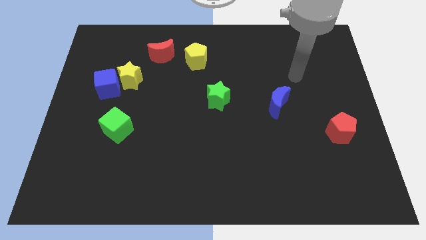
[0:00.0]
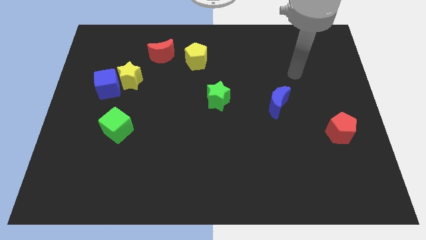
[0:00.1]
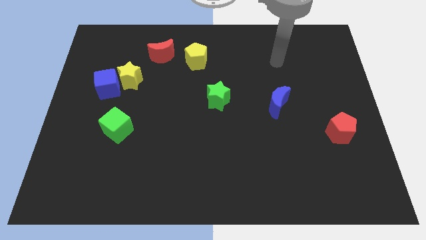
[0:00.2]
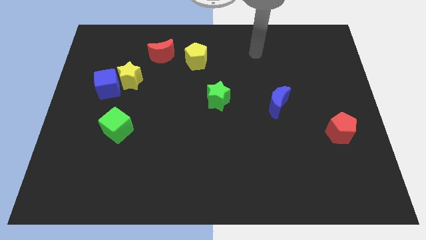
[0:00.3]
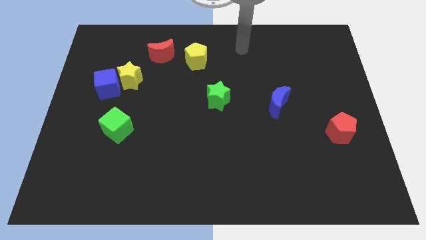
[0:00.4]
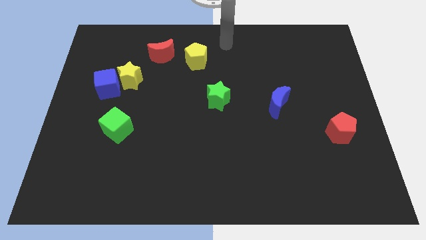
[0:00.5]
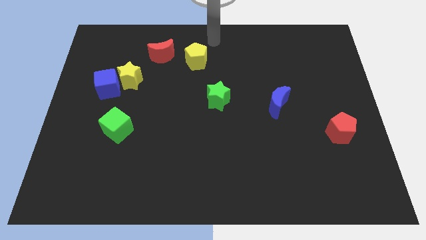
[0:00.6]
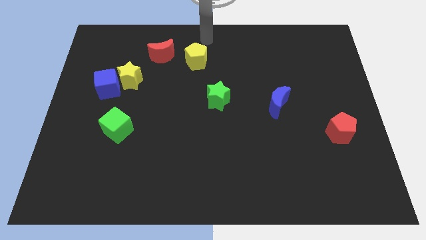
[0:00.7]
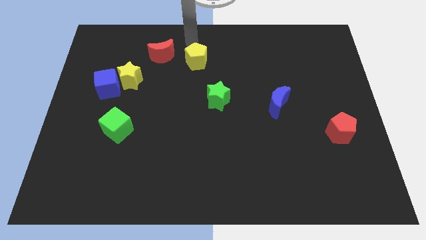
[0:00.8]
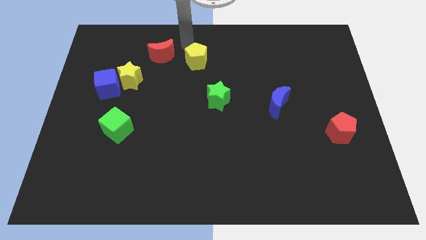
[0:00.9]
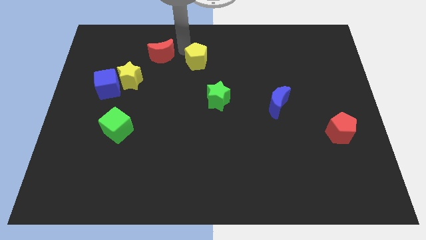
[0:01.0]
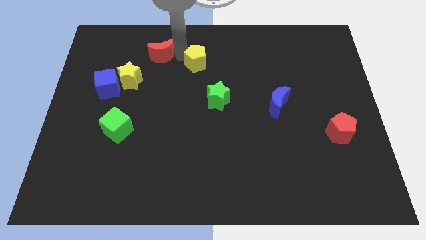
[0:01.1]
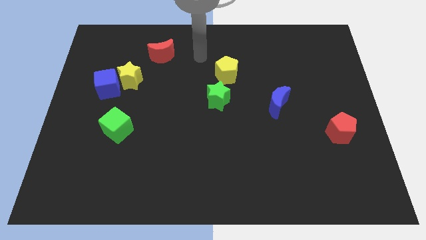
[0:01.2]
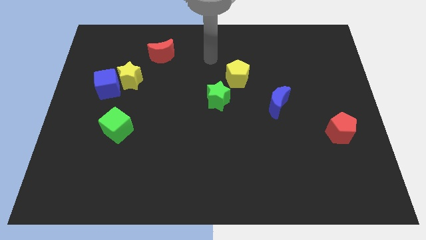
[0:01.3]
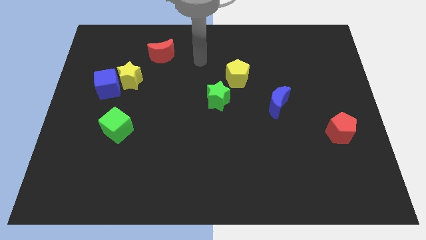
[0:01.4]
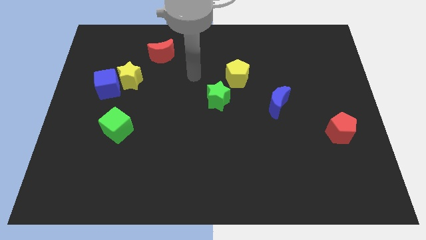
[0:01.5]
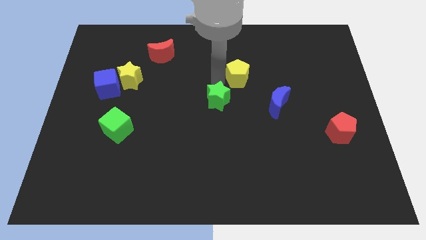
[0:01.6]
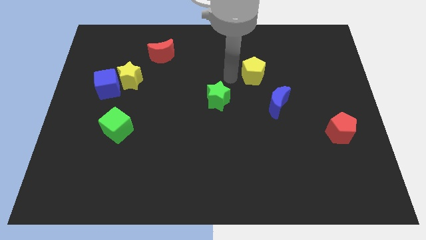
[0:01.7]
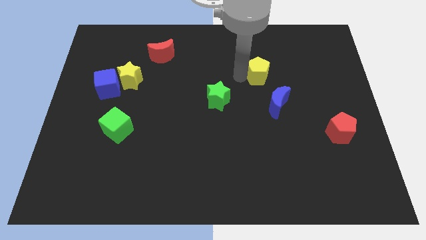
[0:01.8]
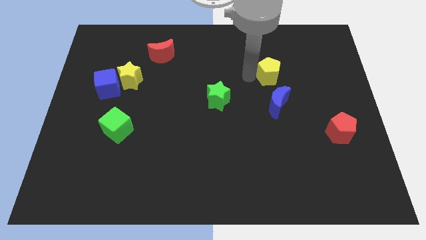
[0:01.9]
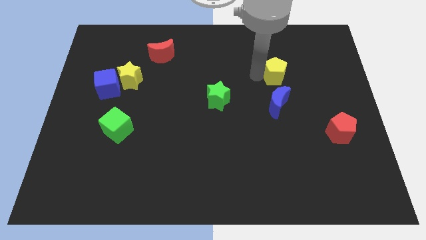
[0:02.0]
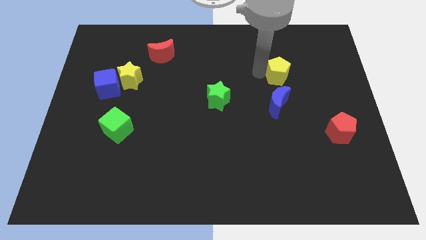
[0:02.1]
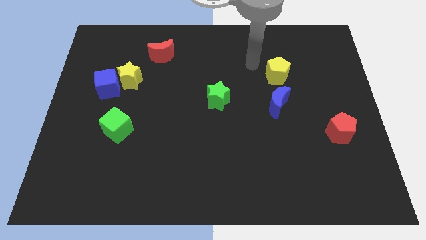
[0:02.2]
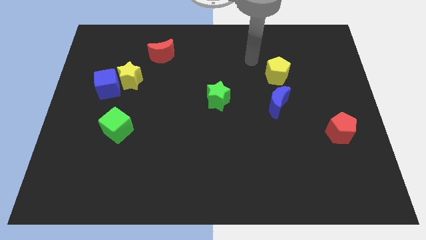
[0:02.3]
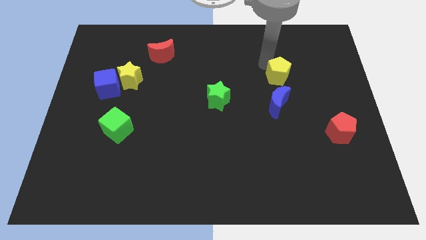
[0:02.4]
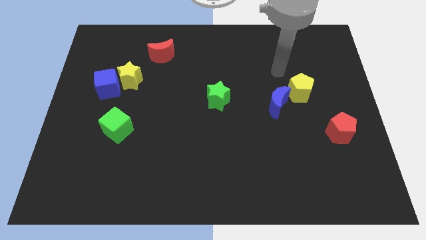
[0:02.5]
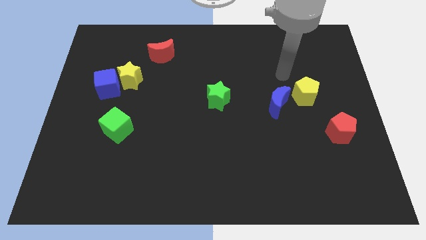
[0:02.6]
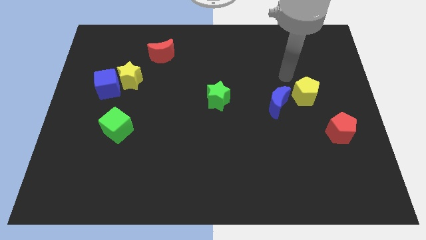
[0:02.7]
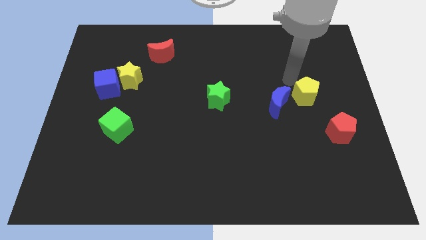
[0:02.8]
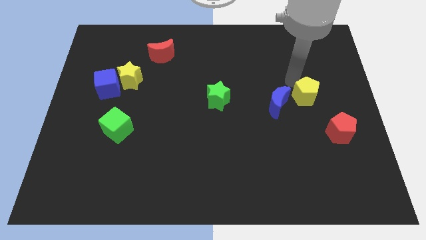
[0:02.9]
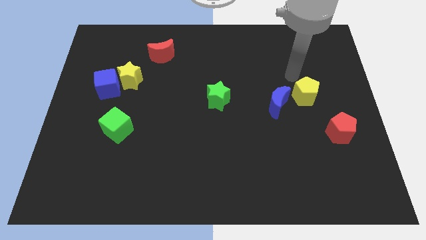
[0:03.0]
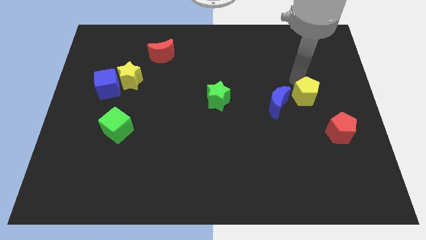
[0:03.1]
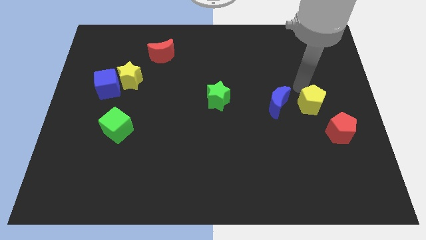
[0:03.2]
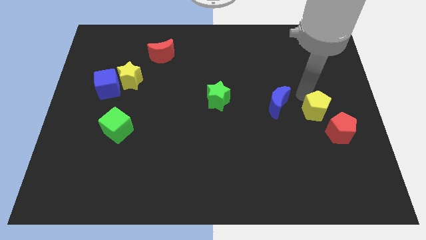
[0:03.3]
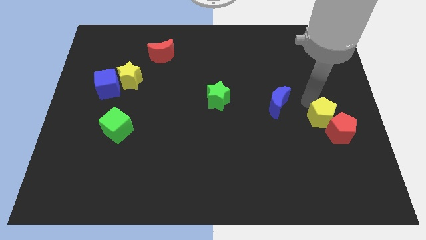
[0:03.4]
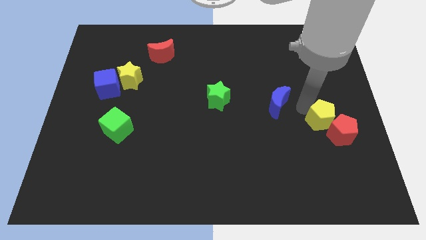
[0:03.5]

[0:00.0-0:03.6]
push the yellow pentagon to the red pentagon

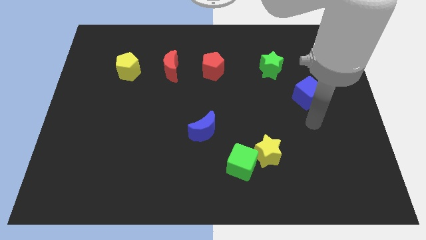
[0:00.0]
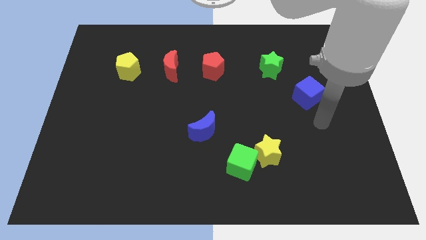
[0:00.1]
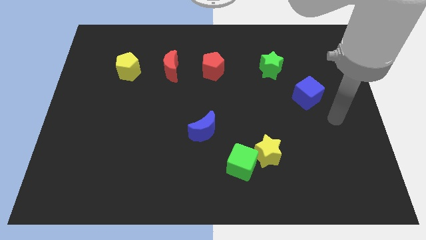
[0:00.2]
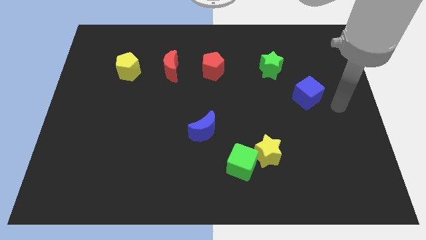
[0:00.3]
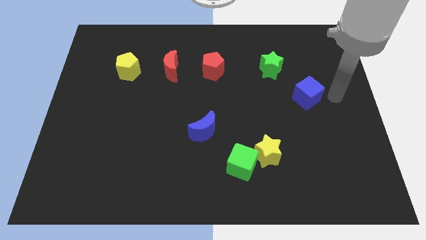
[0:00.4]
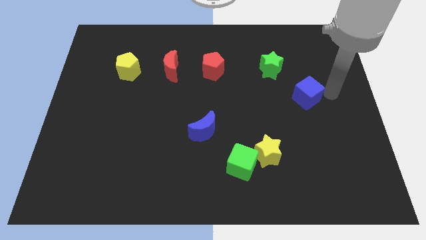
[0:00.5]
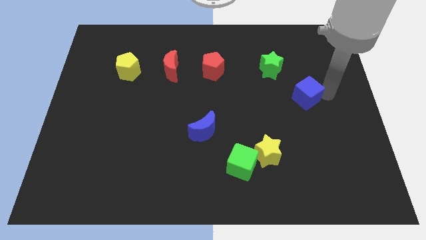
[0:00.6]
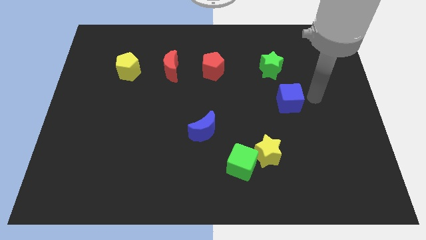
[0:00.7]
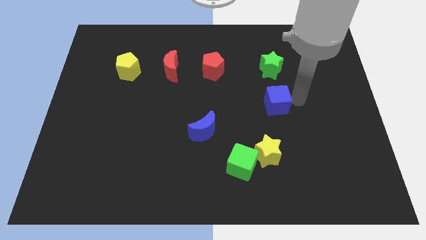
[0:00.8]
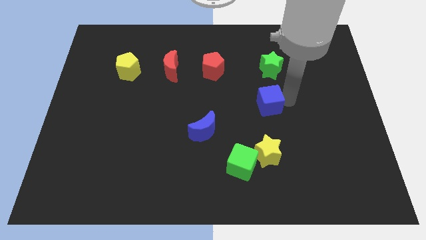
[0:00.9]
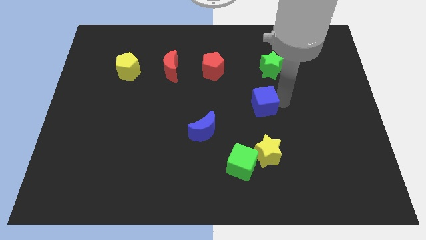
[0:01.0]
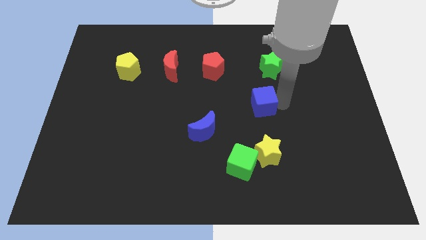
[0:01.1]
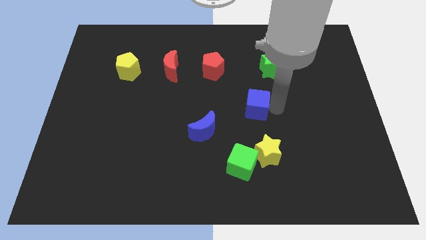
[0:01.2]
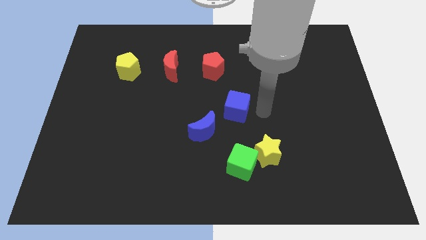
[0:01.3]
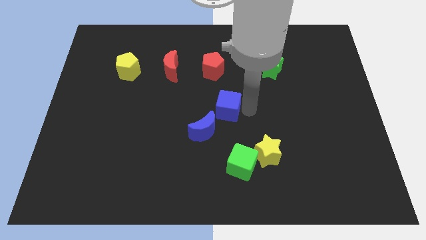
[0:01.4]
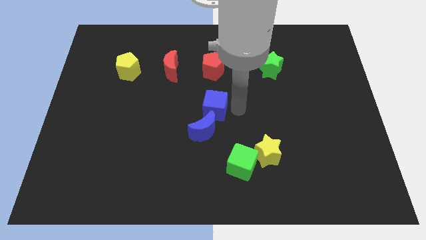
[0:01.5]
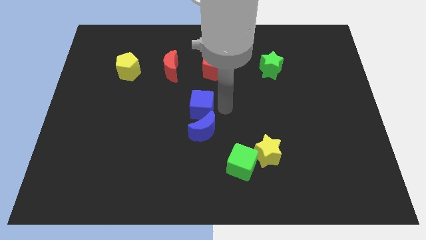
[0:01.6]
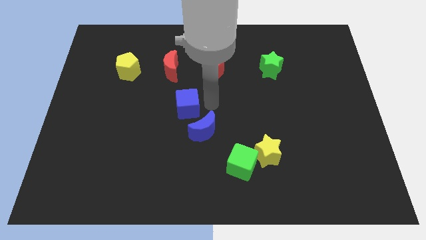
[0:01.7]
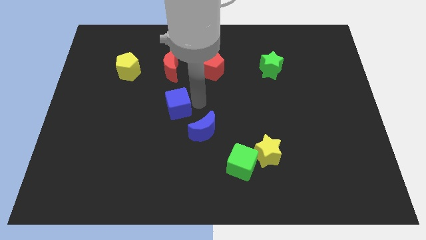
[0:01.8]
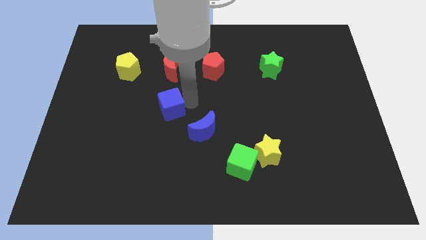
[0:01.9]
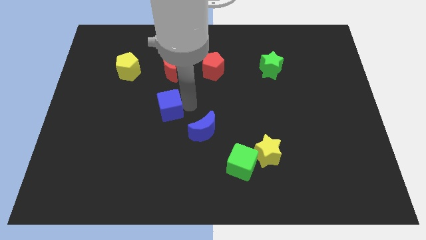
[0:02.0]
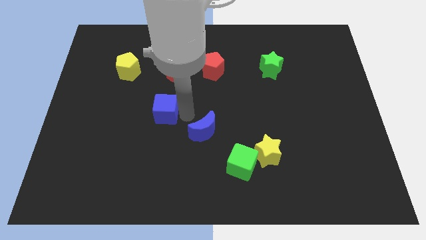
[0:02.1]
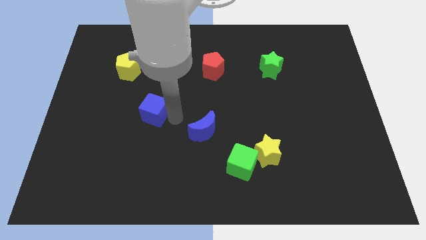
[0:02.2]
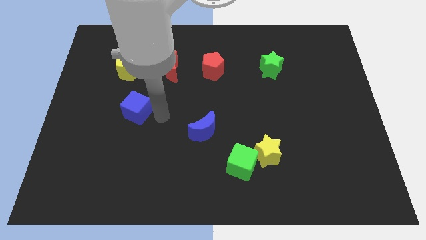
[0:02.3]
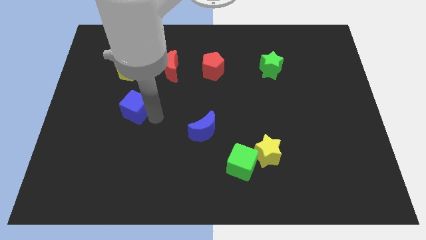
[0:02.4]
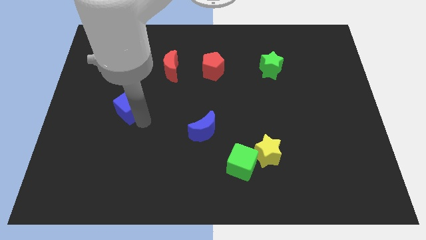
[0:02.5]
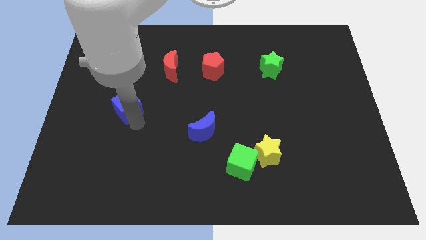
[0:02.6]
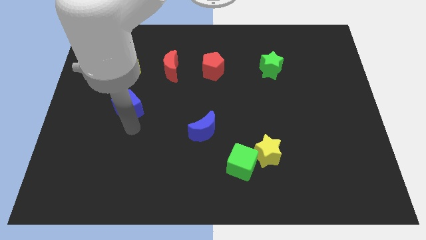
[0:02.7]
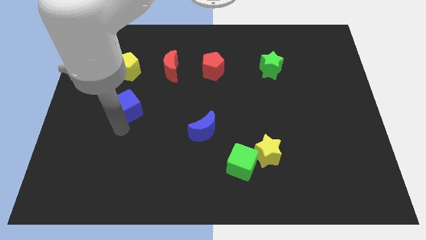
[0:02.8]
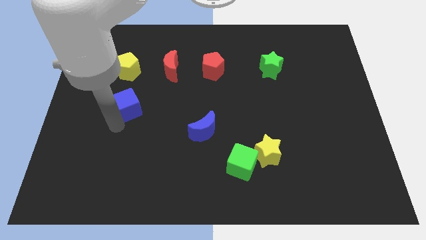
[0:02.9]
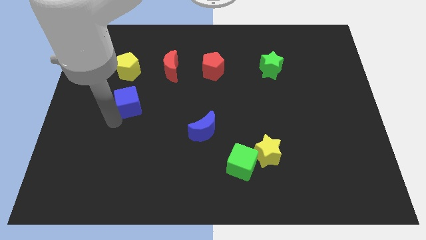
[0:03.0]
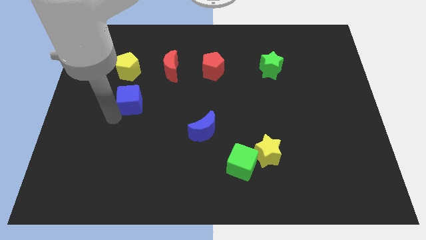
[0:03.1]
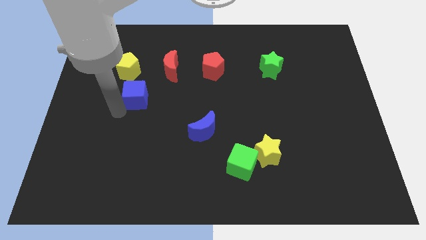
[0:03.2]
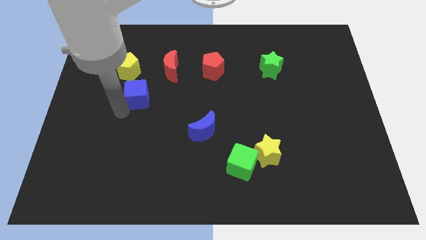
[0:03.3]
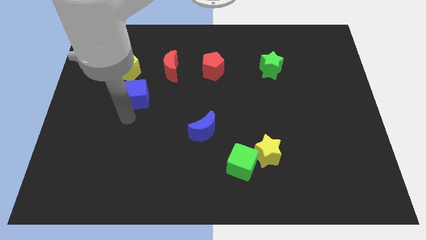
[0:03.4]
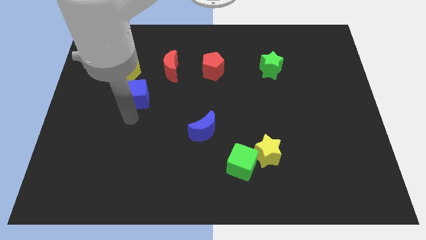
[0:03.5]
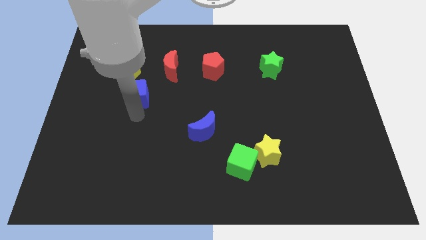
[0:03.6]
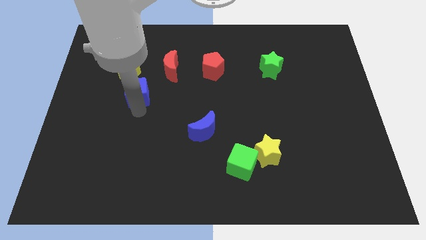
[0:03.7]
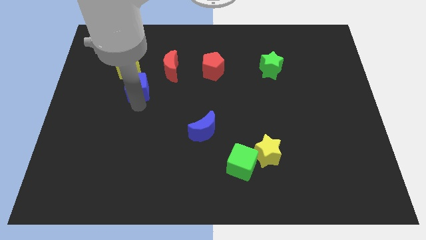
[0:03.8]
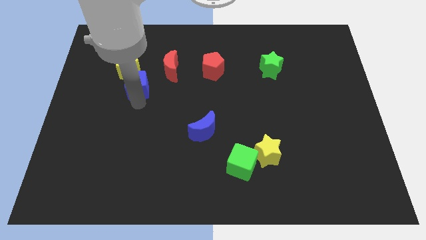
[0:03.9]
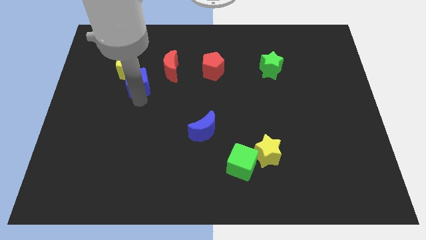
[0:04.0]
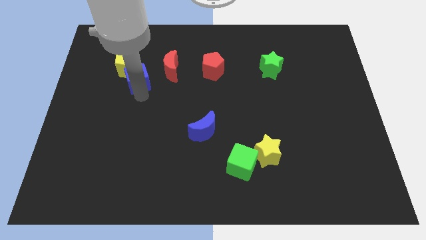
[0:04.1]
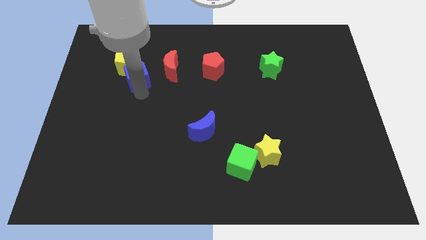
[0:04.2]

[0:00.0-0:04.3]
put the blue cube close to the yellow pentagon

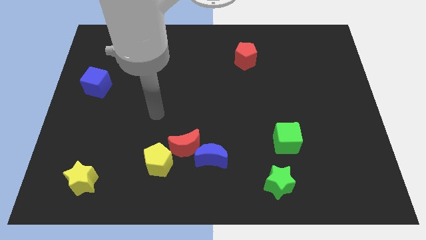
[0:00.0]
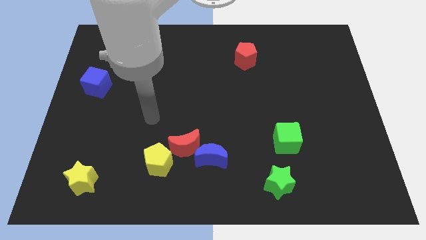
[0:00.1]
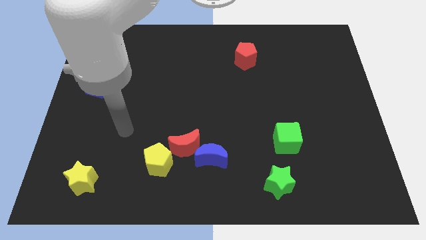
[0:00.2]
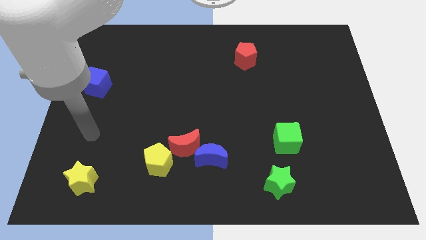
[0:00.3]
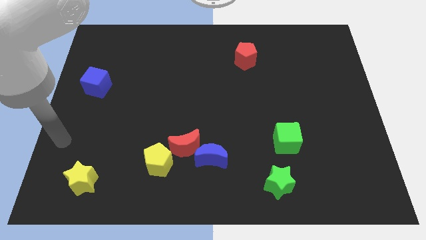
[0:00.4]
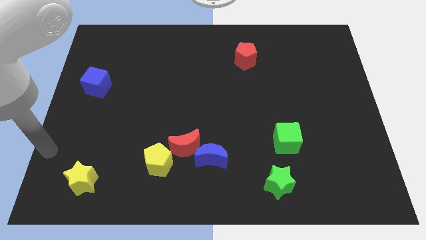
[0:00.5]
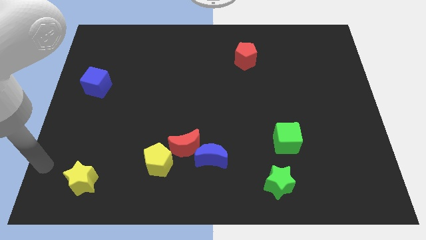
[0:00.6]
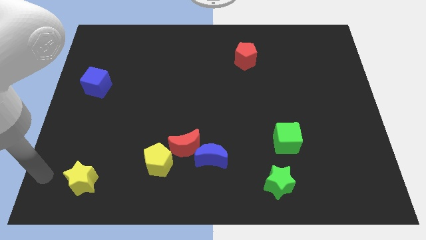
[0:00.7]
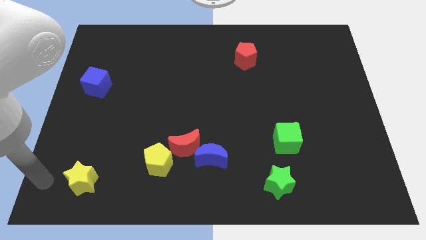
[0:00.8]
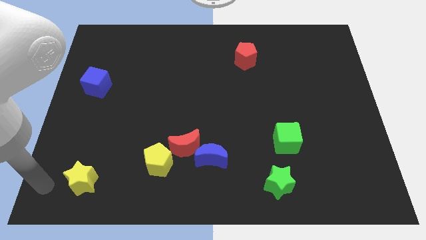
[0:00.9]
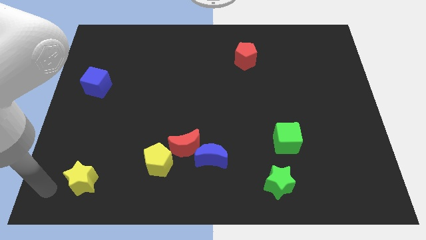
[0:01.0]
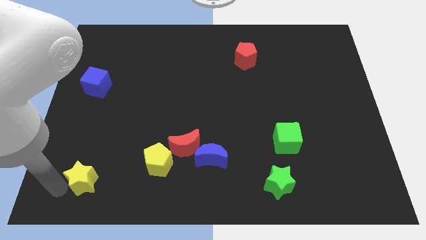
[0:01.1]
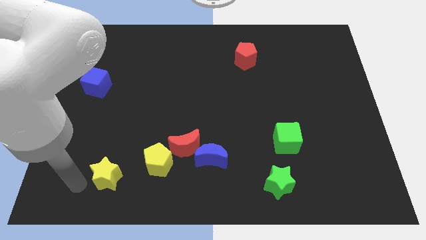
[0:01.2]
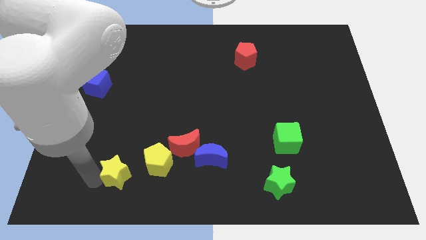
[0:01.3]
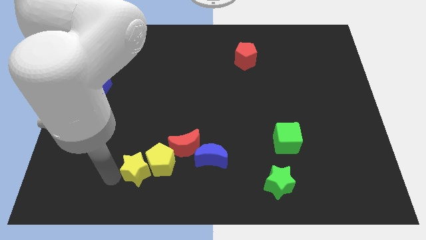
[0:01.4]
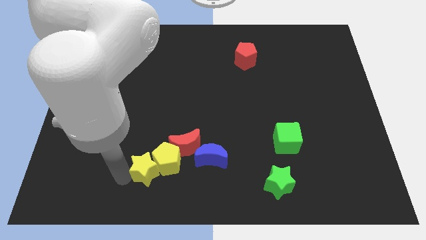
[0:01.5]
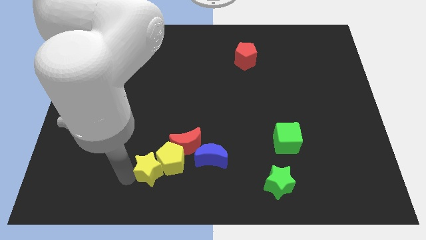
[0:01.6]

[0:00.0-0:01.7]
push the yellow star next to the yellow pentagon
